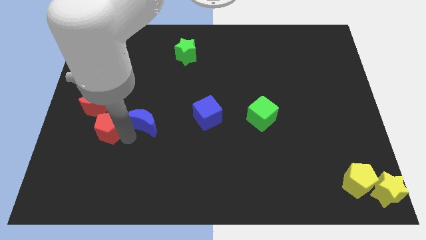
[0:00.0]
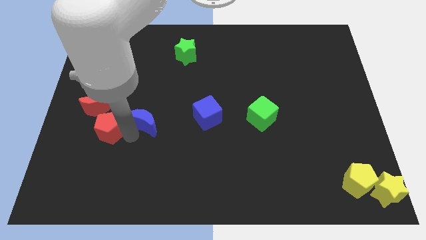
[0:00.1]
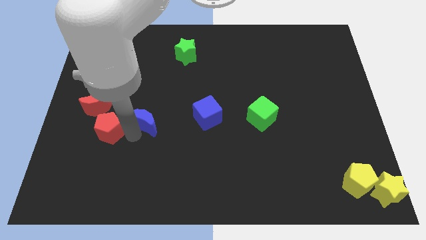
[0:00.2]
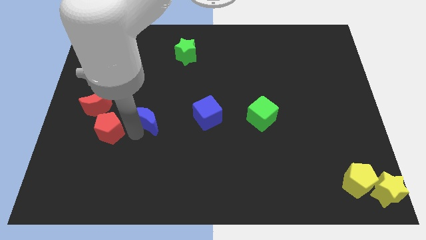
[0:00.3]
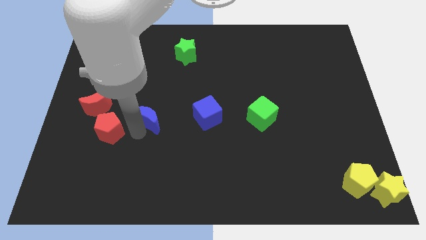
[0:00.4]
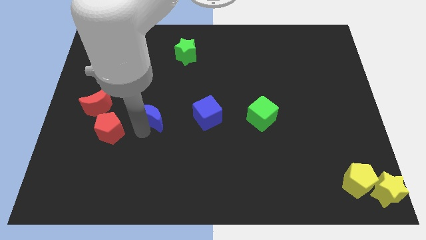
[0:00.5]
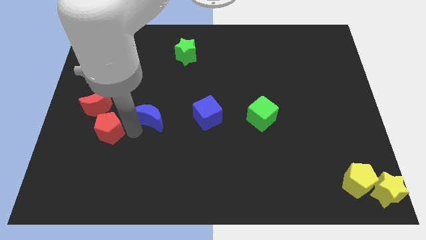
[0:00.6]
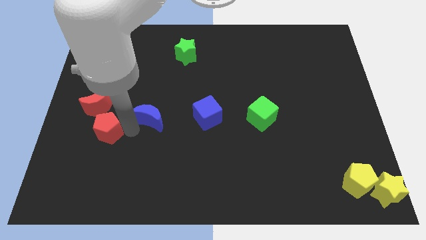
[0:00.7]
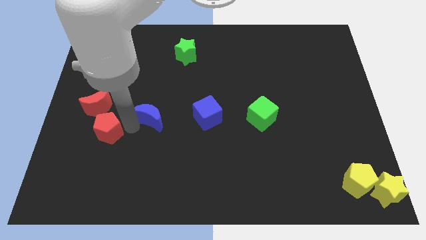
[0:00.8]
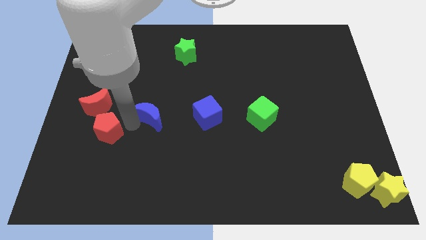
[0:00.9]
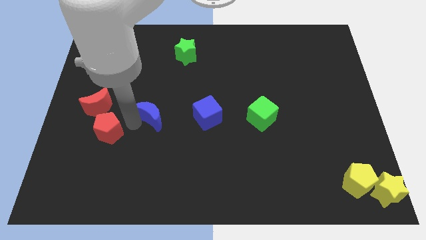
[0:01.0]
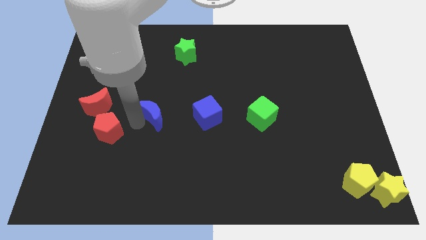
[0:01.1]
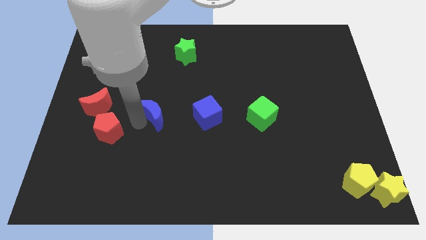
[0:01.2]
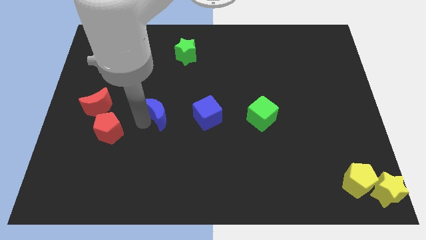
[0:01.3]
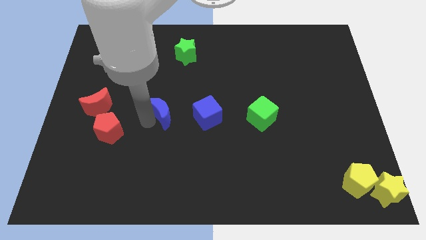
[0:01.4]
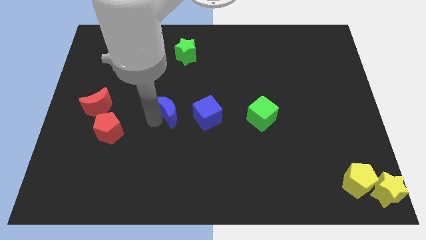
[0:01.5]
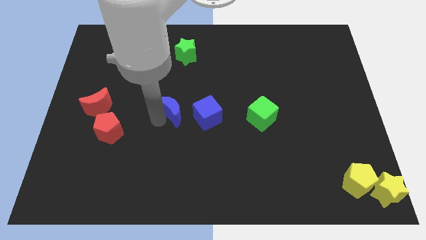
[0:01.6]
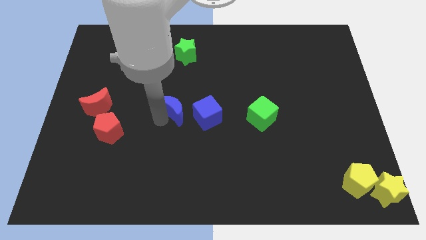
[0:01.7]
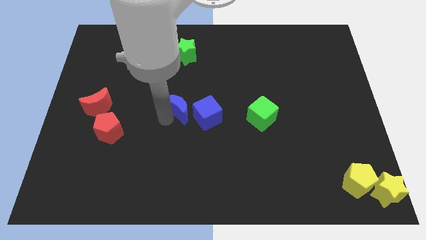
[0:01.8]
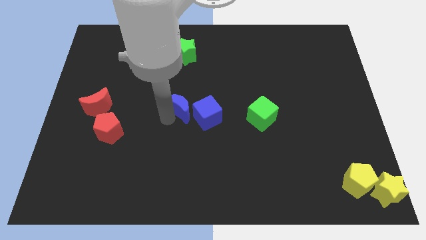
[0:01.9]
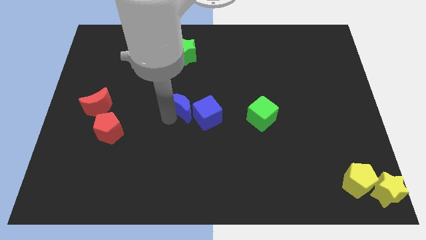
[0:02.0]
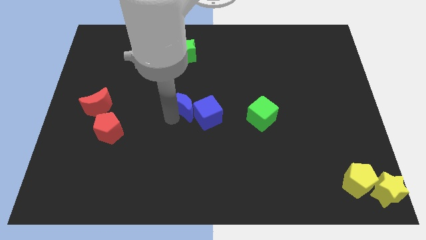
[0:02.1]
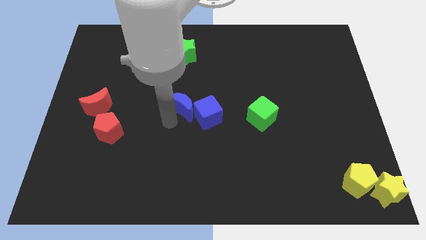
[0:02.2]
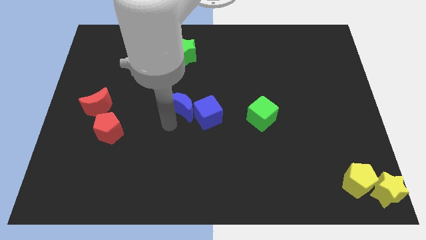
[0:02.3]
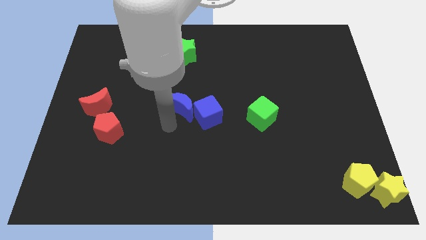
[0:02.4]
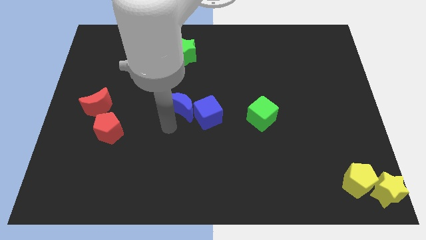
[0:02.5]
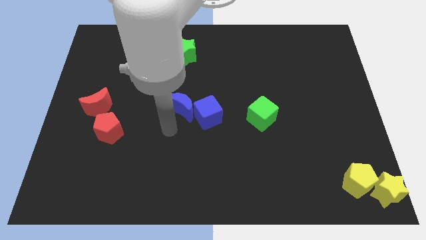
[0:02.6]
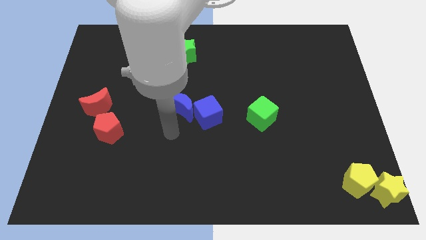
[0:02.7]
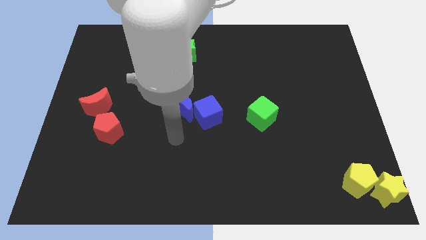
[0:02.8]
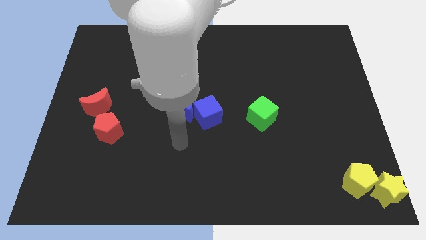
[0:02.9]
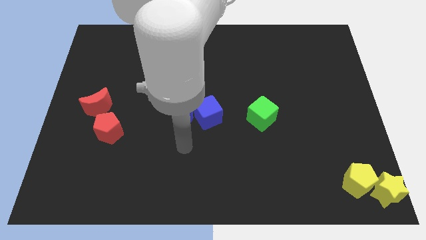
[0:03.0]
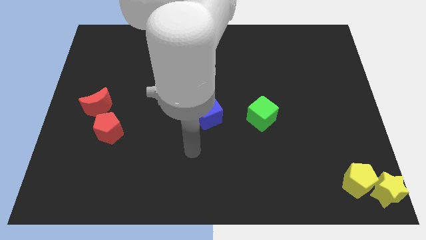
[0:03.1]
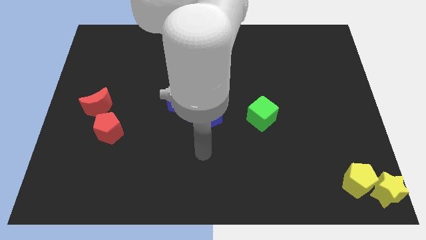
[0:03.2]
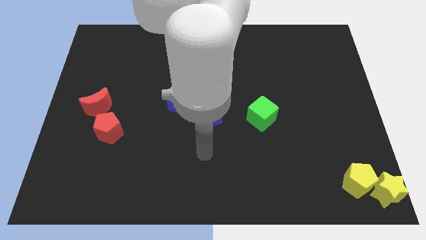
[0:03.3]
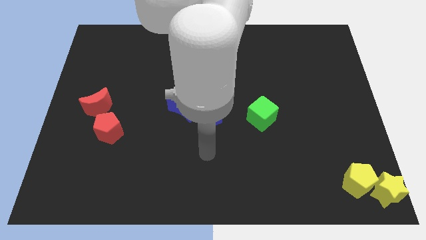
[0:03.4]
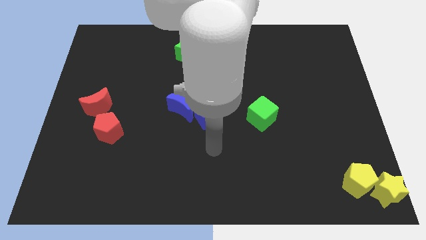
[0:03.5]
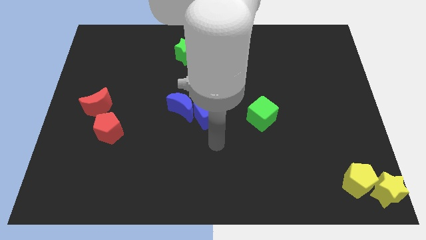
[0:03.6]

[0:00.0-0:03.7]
push the blue moon into the blue cube

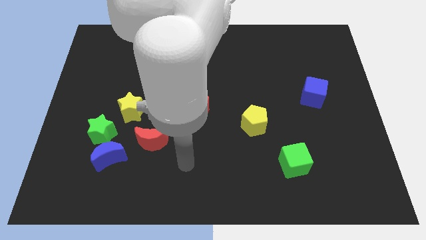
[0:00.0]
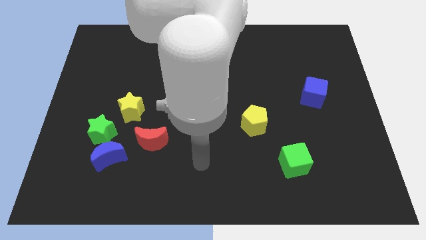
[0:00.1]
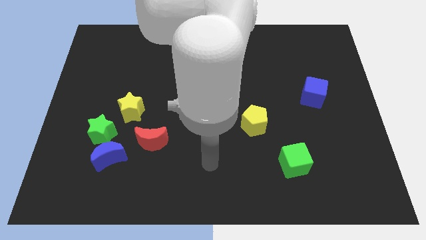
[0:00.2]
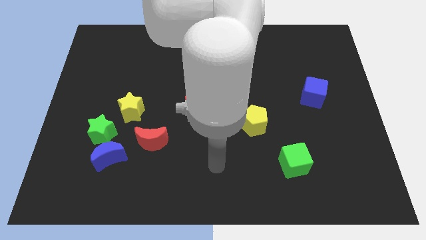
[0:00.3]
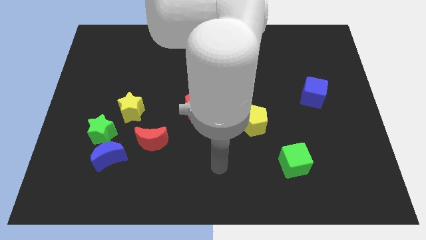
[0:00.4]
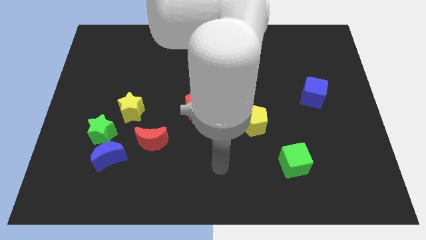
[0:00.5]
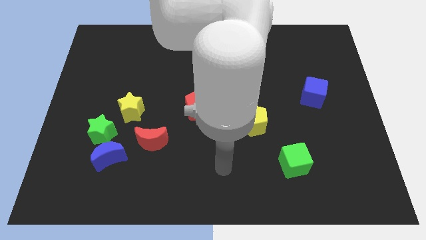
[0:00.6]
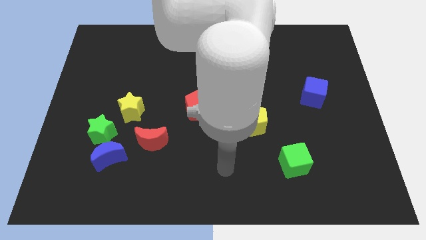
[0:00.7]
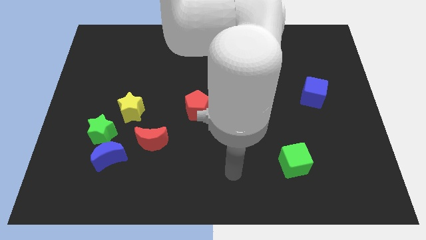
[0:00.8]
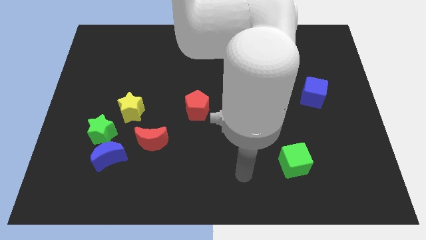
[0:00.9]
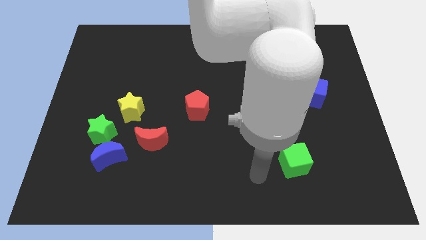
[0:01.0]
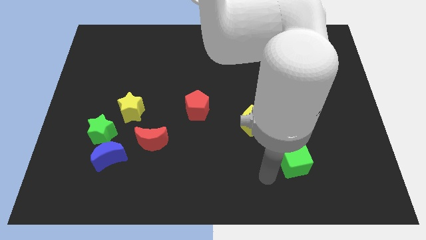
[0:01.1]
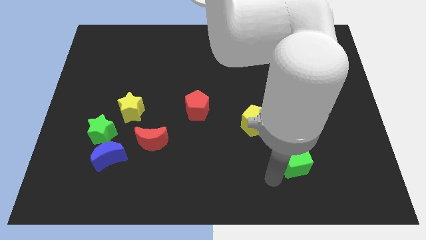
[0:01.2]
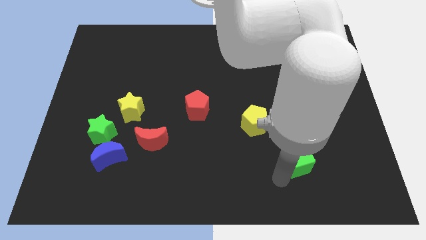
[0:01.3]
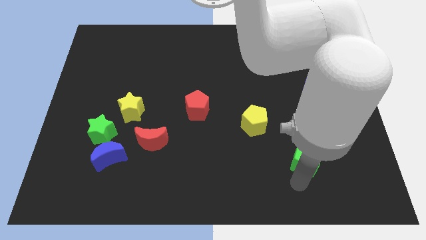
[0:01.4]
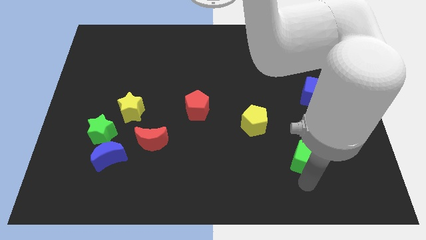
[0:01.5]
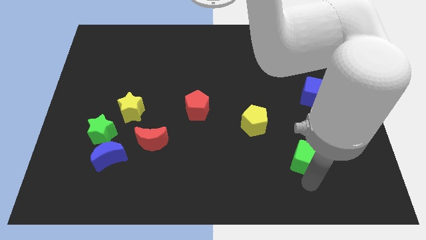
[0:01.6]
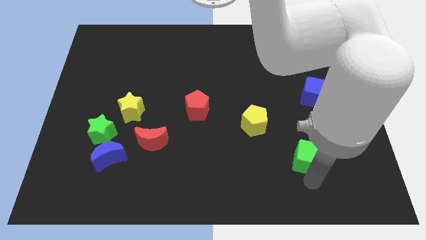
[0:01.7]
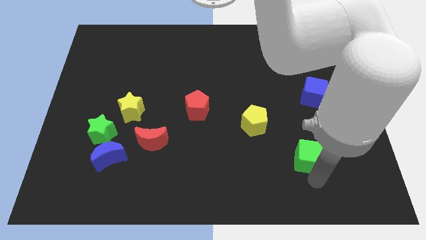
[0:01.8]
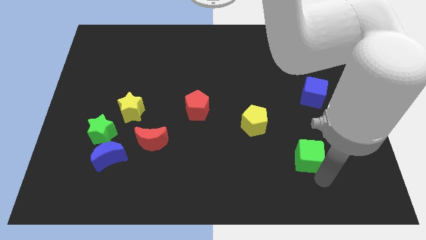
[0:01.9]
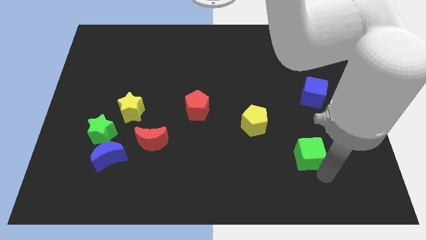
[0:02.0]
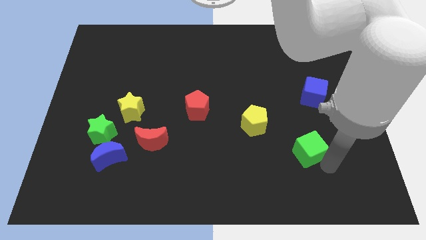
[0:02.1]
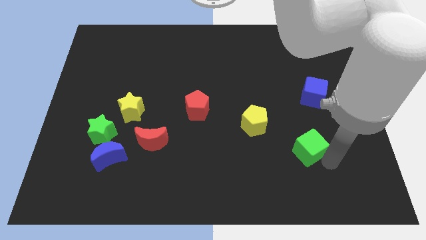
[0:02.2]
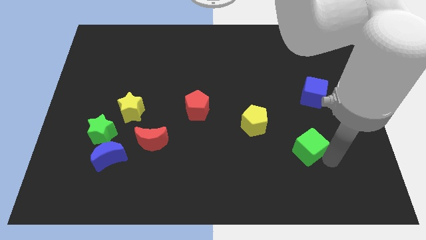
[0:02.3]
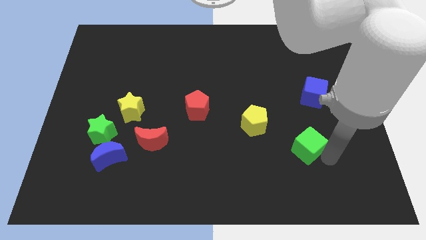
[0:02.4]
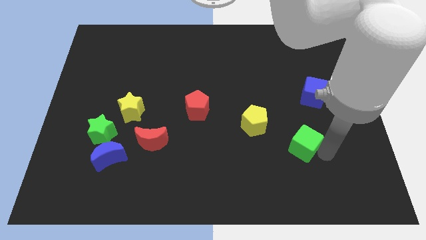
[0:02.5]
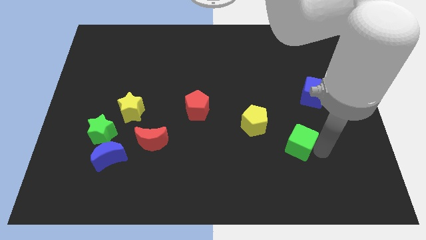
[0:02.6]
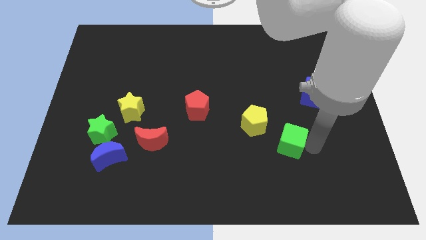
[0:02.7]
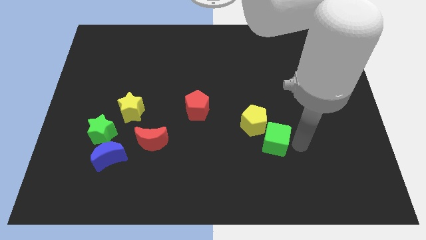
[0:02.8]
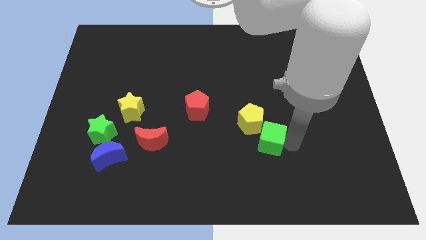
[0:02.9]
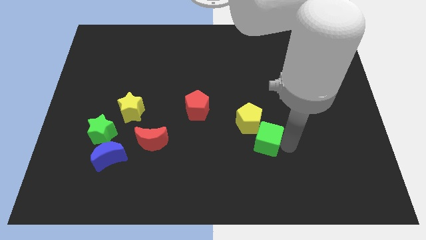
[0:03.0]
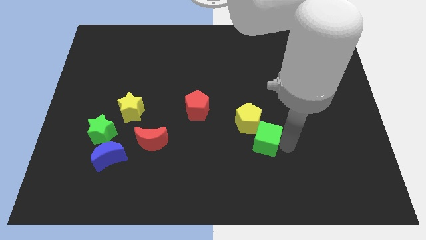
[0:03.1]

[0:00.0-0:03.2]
slide the green cube into the bottom right side of the yellow pentagon

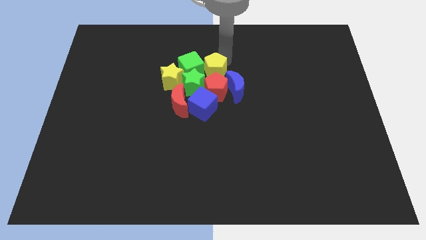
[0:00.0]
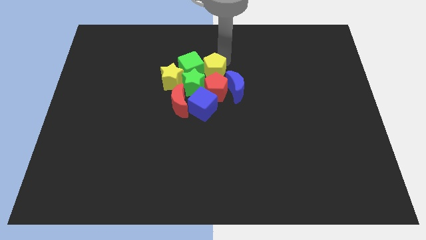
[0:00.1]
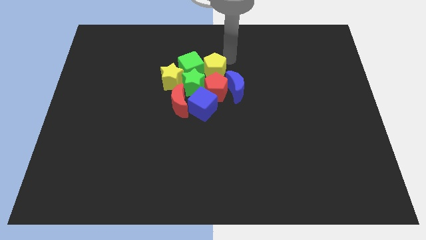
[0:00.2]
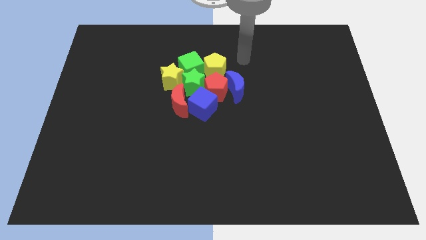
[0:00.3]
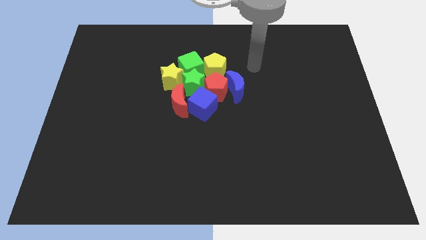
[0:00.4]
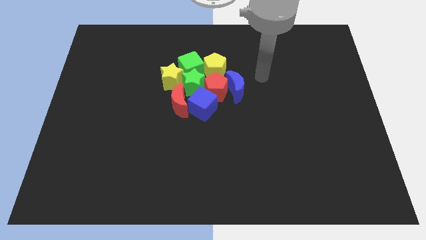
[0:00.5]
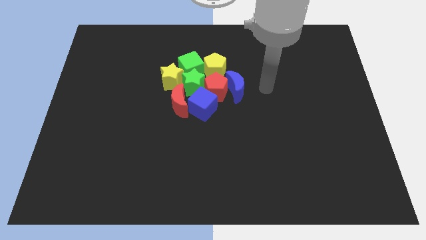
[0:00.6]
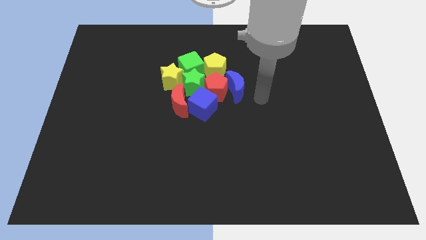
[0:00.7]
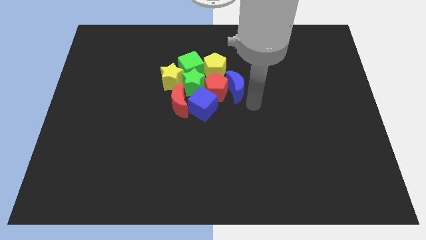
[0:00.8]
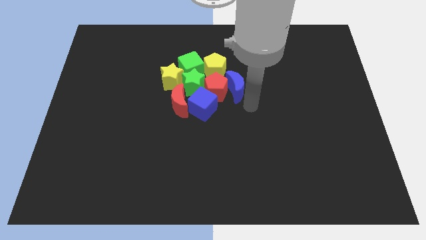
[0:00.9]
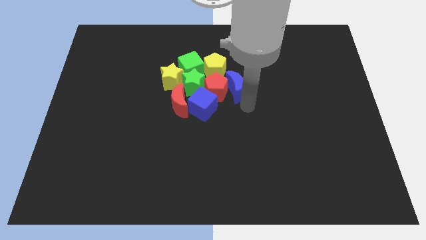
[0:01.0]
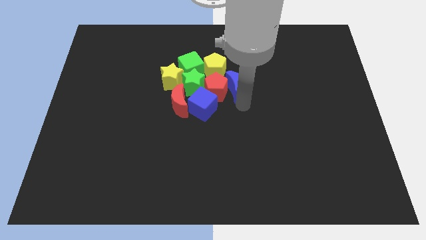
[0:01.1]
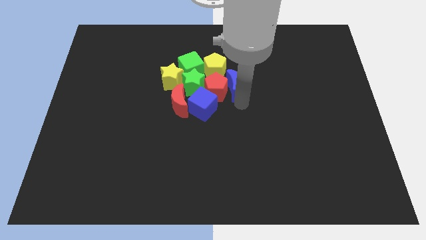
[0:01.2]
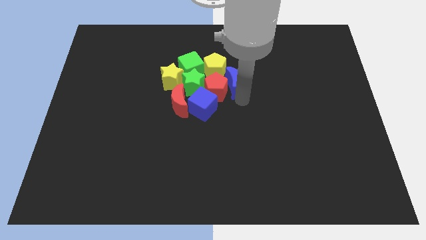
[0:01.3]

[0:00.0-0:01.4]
touch the bottom of the blue moon

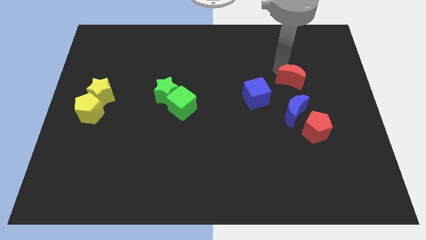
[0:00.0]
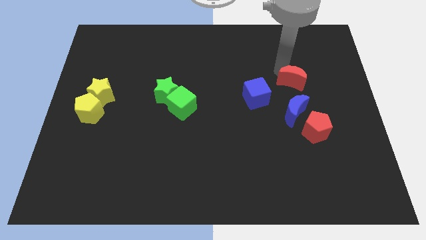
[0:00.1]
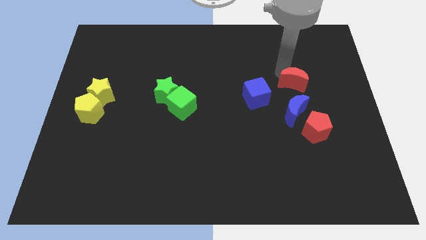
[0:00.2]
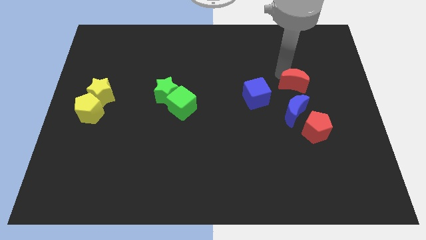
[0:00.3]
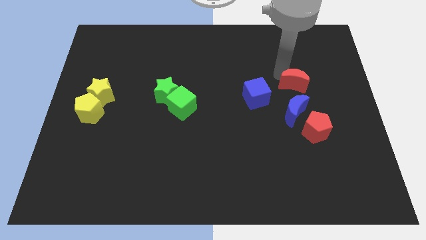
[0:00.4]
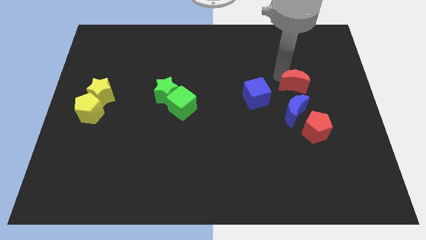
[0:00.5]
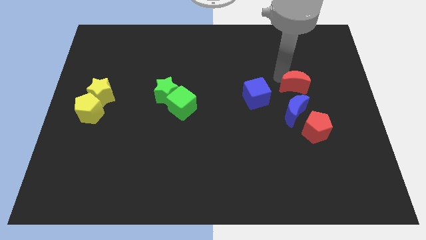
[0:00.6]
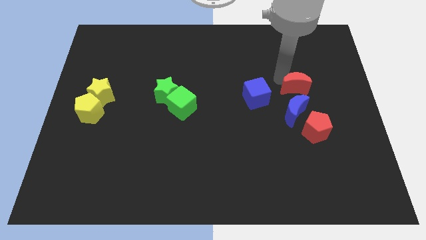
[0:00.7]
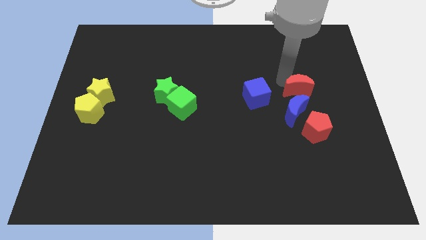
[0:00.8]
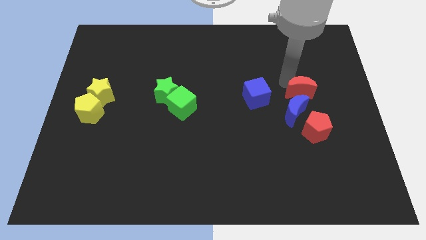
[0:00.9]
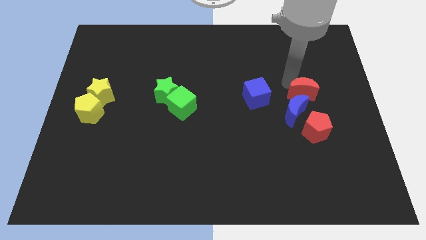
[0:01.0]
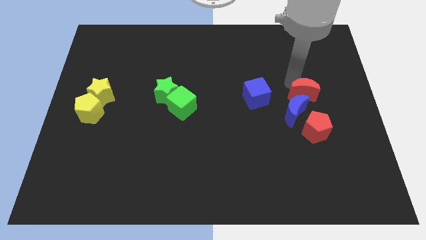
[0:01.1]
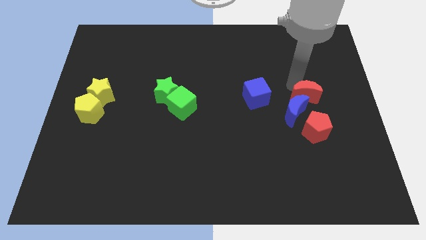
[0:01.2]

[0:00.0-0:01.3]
move the red moon towards the top of the blue moon
